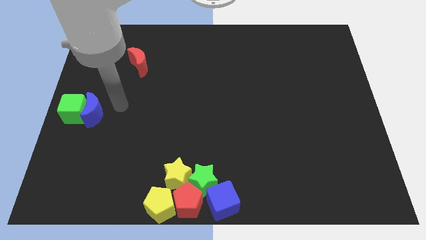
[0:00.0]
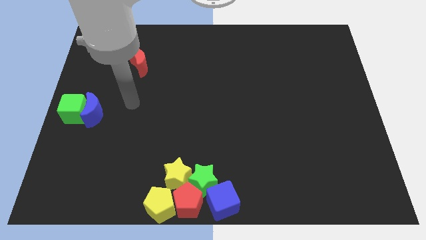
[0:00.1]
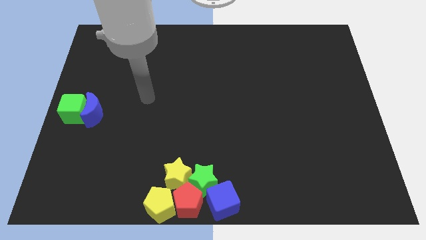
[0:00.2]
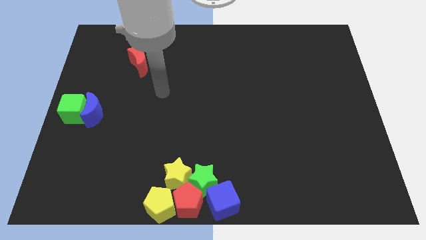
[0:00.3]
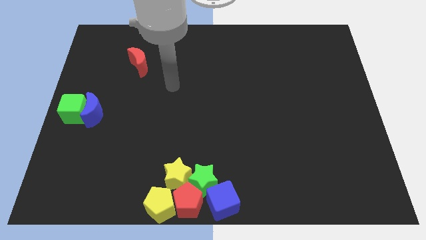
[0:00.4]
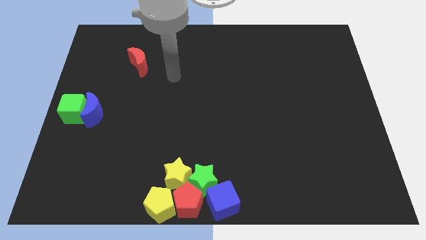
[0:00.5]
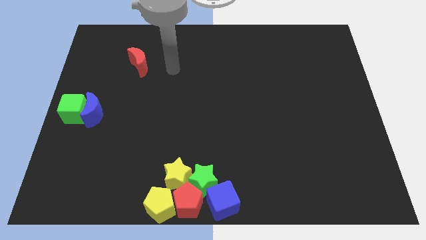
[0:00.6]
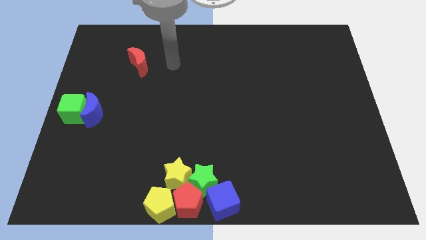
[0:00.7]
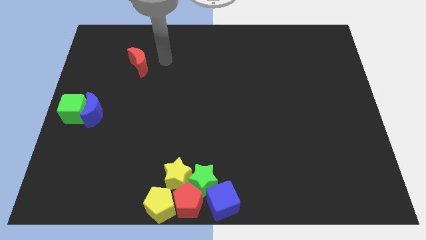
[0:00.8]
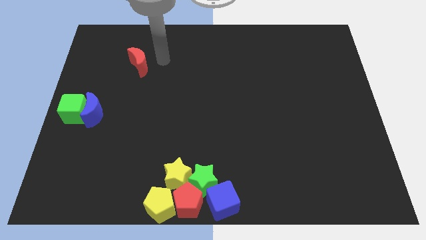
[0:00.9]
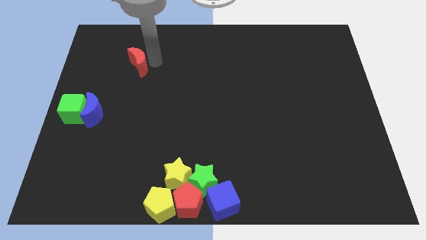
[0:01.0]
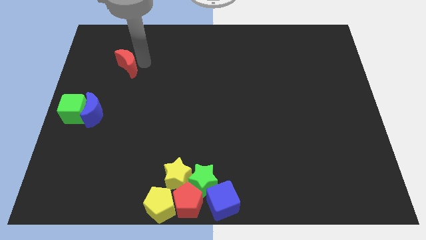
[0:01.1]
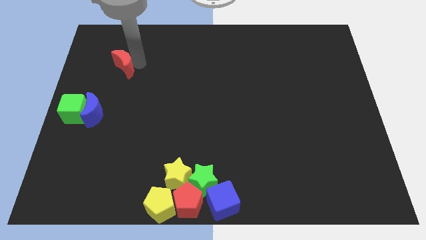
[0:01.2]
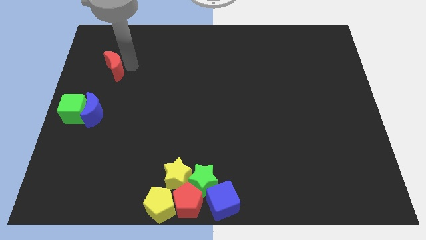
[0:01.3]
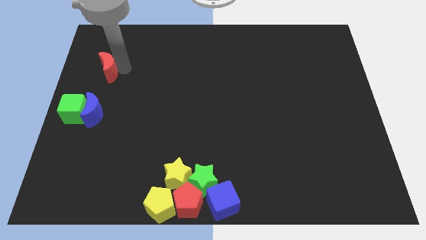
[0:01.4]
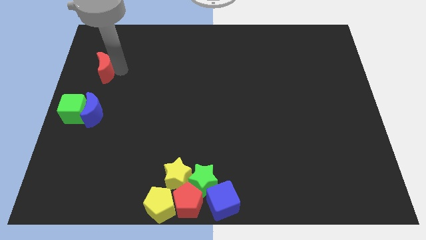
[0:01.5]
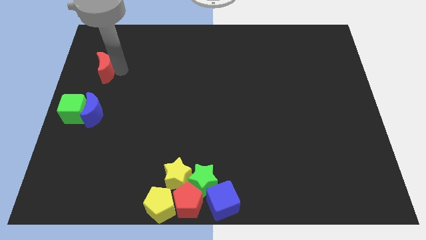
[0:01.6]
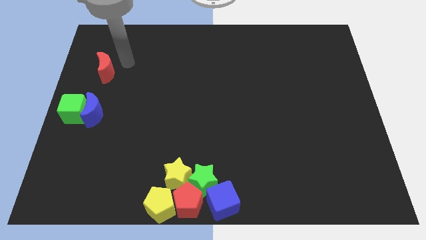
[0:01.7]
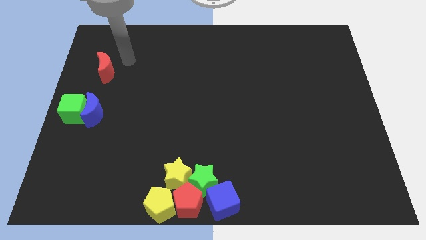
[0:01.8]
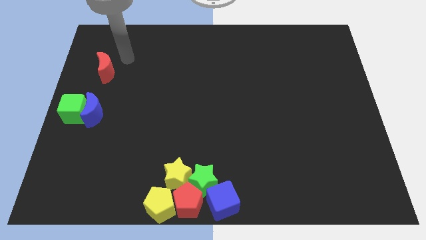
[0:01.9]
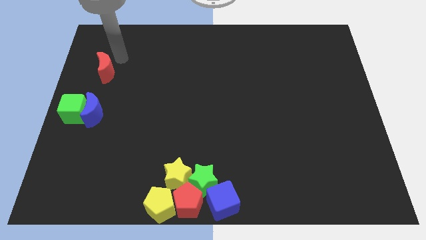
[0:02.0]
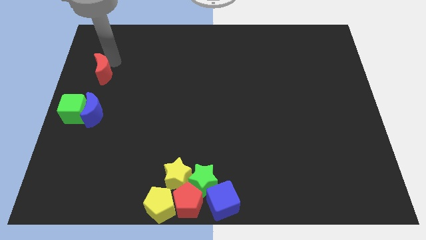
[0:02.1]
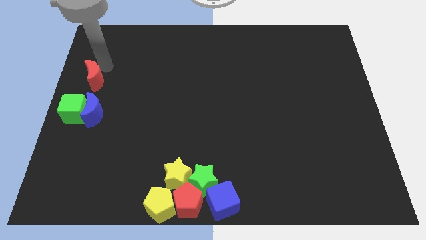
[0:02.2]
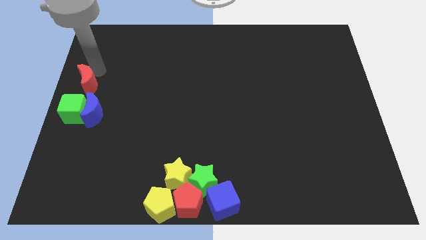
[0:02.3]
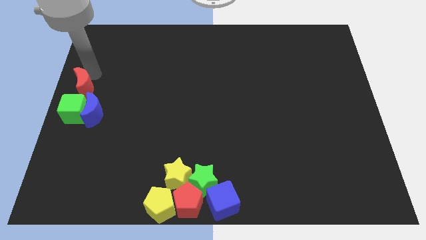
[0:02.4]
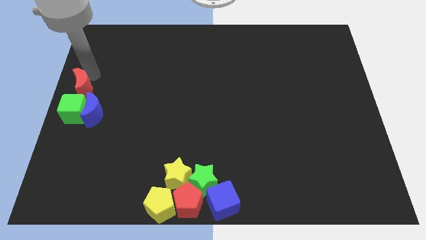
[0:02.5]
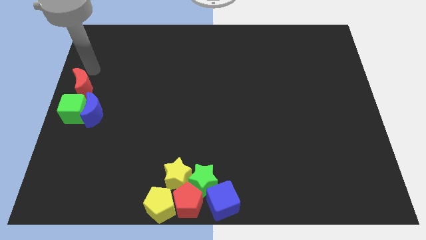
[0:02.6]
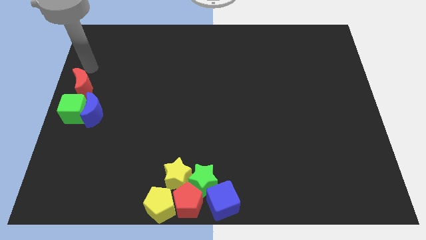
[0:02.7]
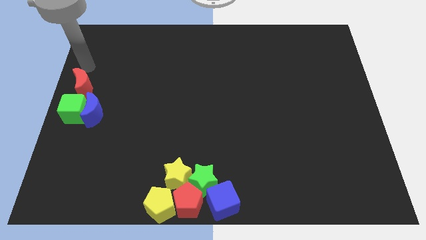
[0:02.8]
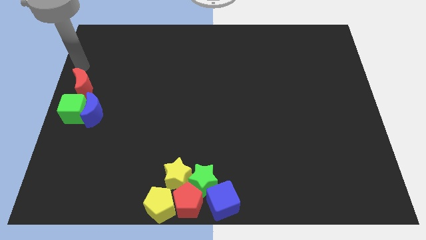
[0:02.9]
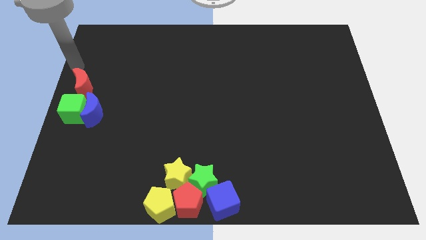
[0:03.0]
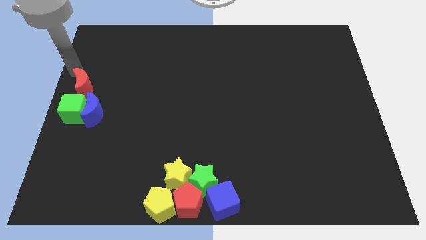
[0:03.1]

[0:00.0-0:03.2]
place the red crescent above the green cube

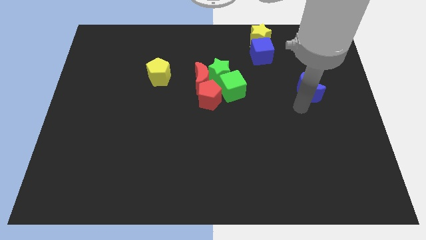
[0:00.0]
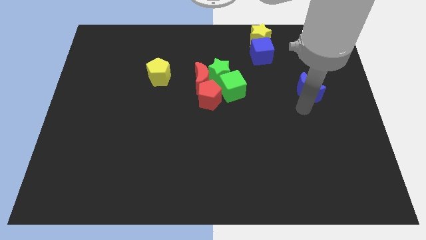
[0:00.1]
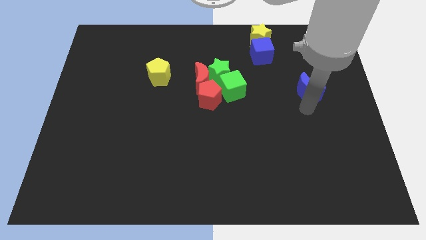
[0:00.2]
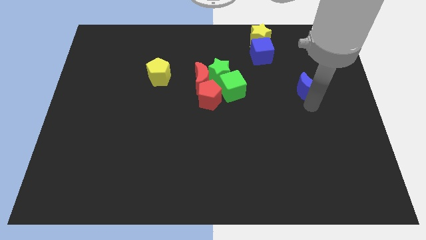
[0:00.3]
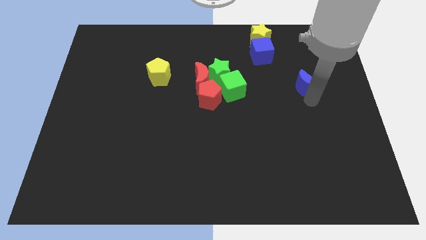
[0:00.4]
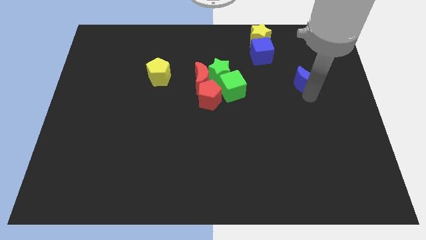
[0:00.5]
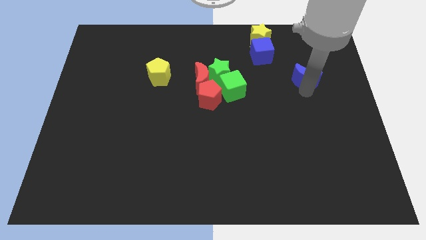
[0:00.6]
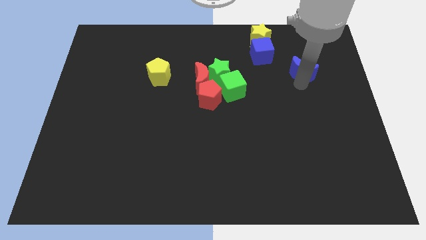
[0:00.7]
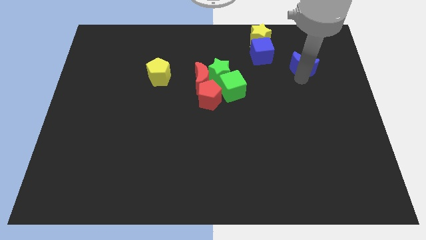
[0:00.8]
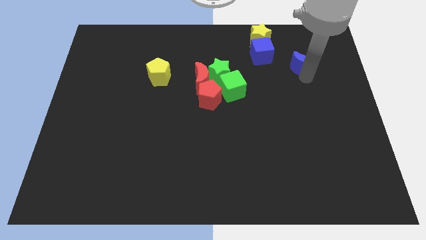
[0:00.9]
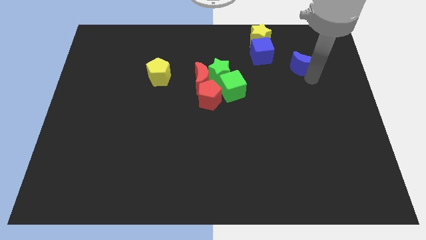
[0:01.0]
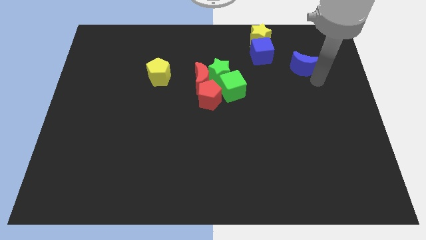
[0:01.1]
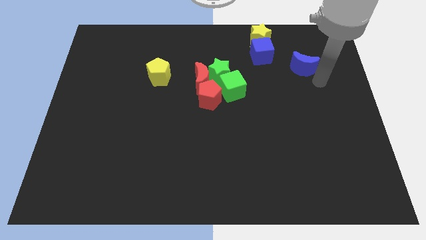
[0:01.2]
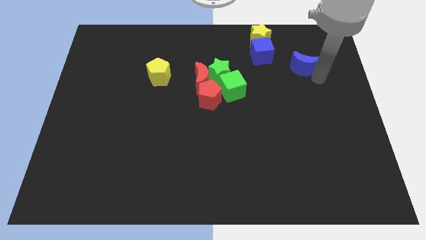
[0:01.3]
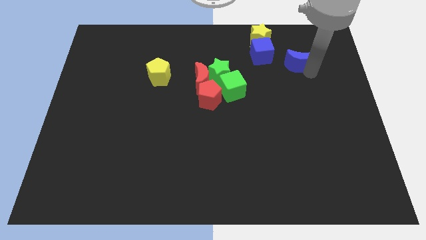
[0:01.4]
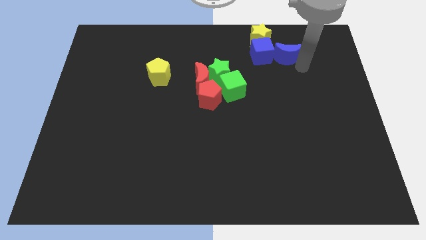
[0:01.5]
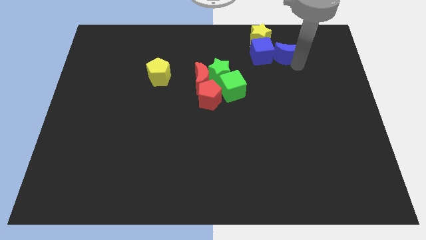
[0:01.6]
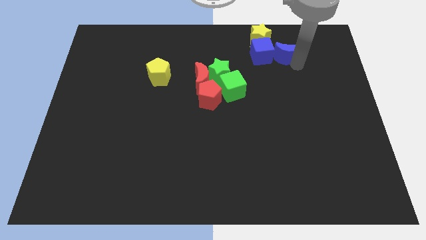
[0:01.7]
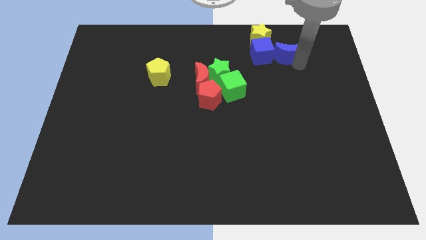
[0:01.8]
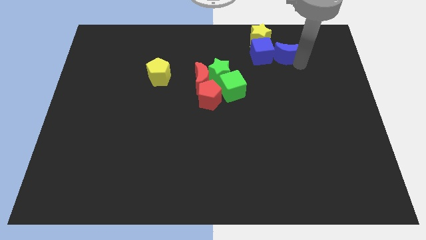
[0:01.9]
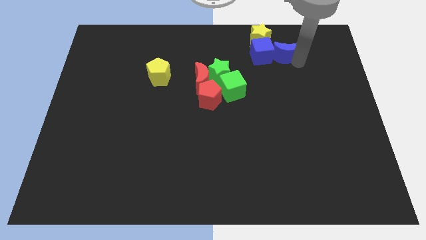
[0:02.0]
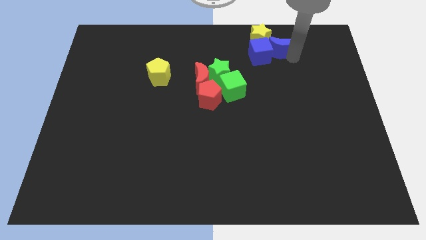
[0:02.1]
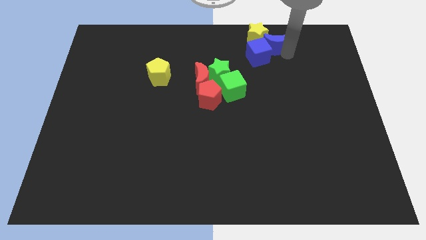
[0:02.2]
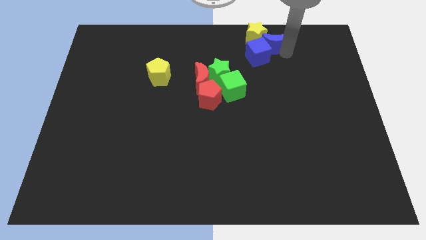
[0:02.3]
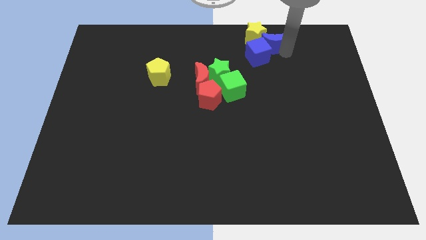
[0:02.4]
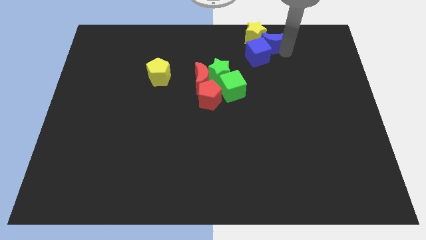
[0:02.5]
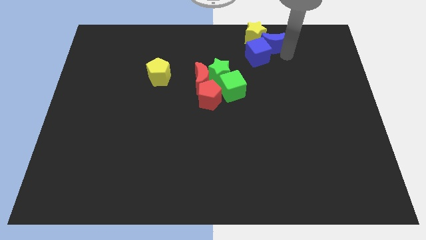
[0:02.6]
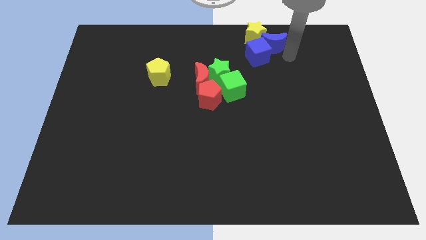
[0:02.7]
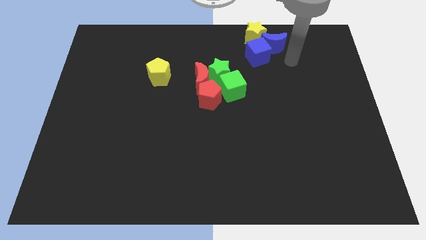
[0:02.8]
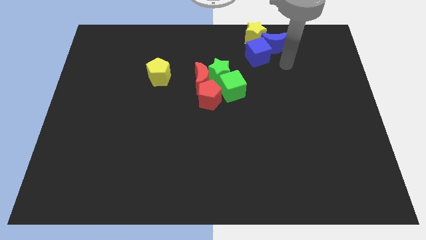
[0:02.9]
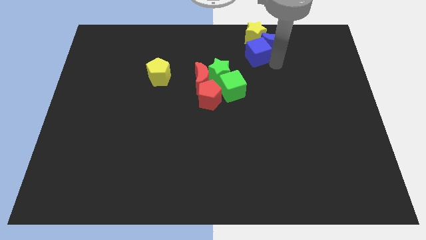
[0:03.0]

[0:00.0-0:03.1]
push the blue crescent close right to the yellow star

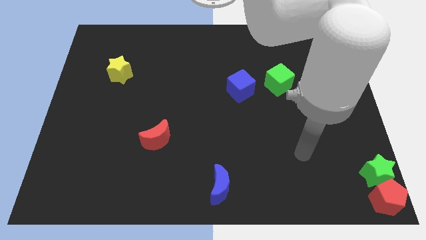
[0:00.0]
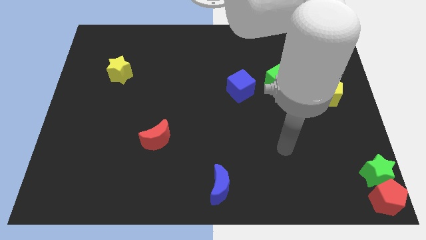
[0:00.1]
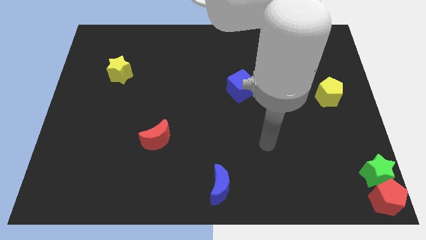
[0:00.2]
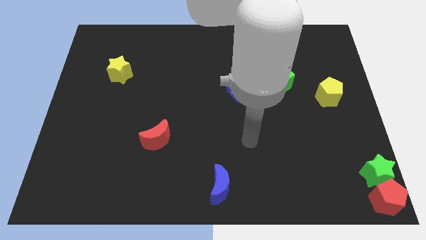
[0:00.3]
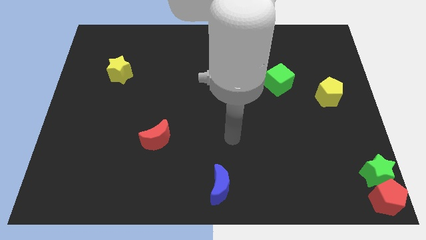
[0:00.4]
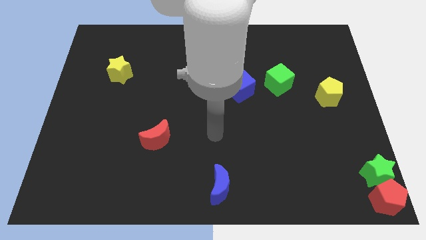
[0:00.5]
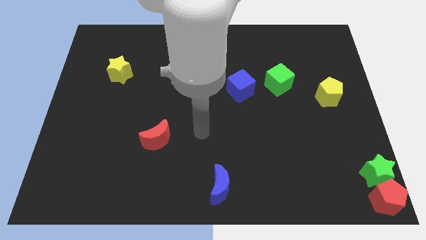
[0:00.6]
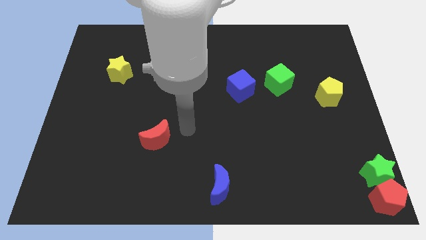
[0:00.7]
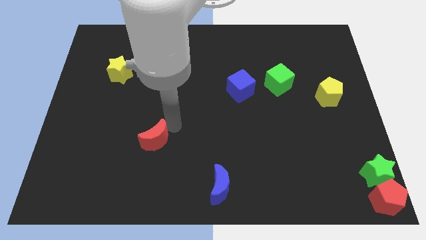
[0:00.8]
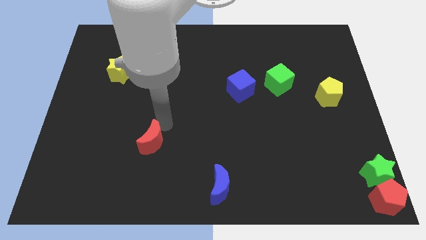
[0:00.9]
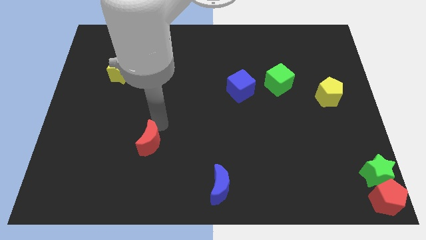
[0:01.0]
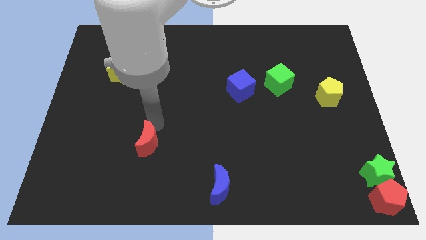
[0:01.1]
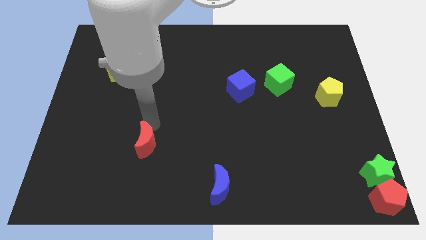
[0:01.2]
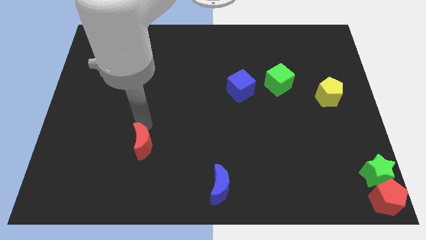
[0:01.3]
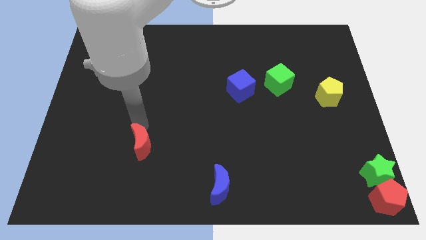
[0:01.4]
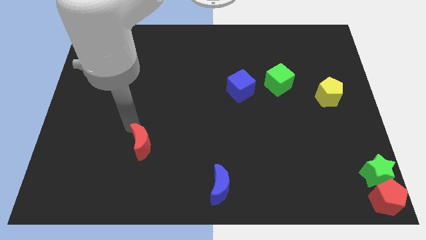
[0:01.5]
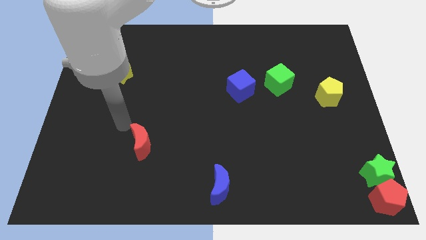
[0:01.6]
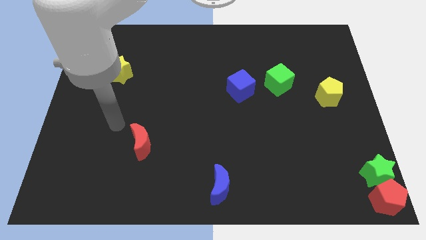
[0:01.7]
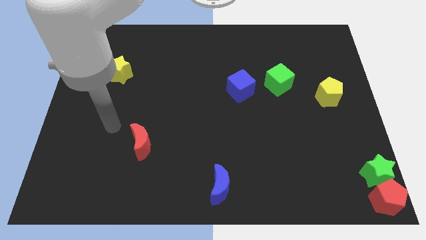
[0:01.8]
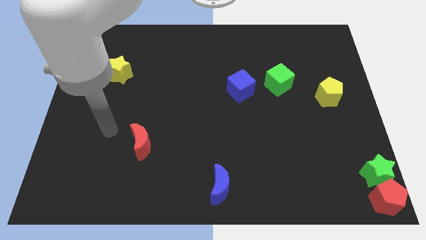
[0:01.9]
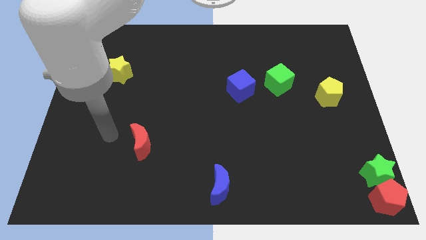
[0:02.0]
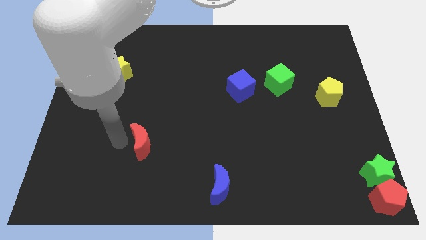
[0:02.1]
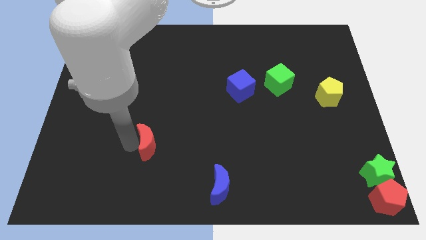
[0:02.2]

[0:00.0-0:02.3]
turn the red moon below yellow star diagonally

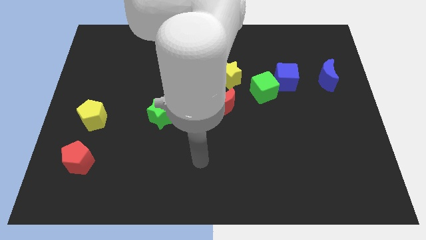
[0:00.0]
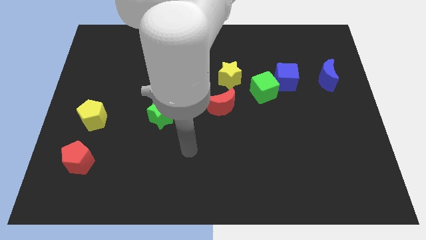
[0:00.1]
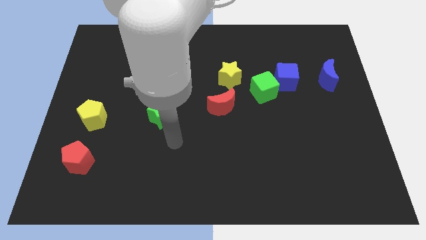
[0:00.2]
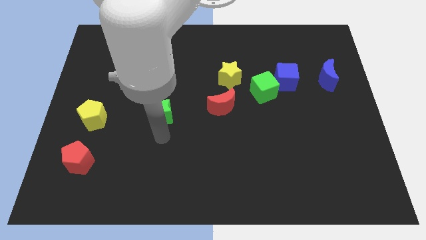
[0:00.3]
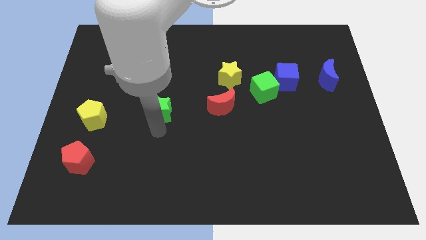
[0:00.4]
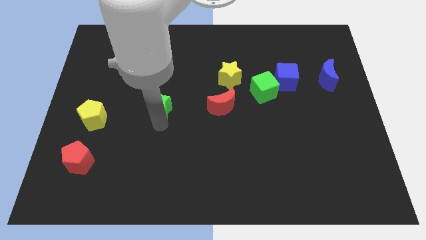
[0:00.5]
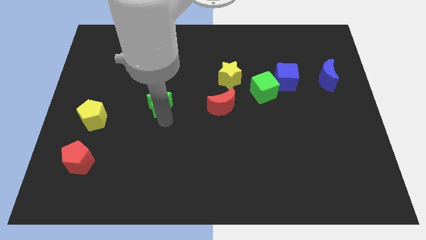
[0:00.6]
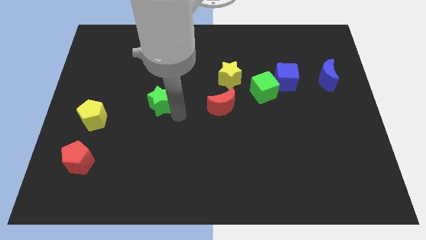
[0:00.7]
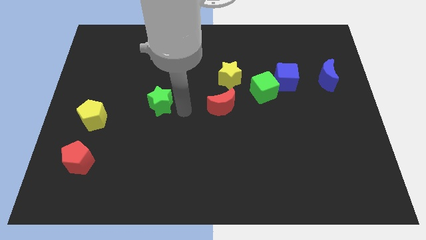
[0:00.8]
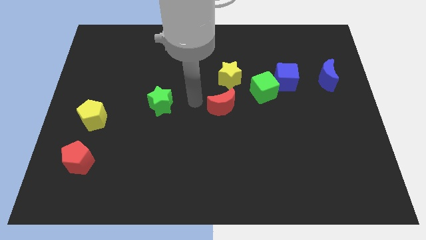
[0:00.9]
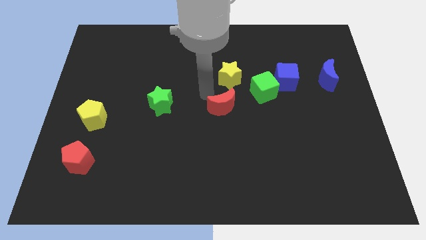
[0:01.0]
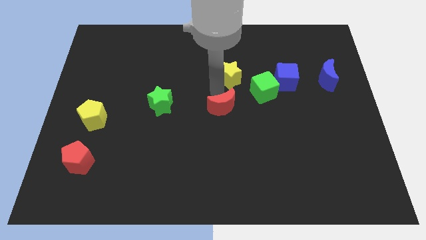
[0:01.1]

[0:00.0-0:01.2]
move green star slightly upwards
